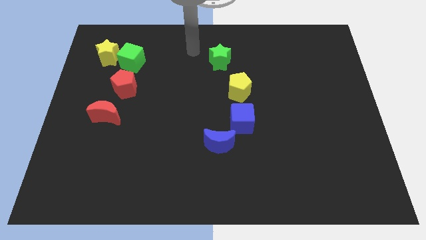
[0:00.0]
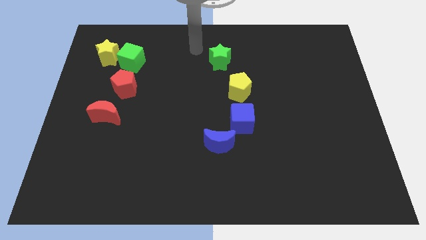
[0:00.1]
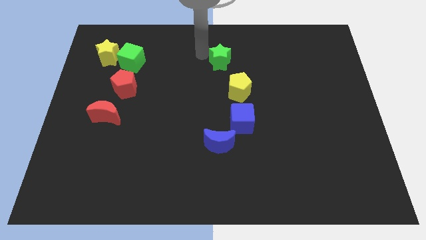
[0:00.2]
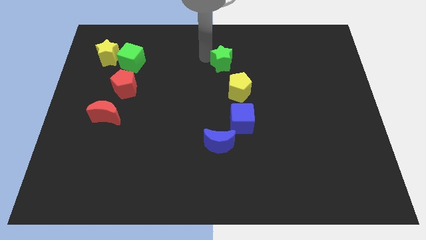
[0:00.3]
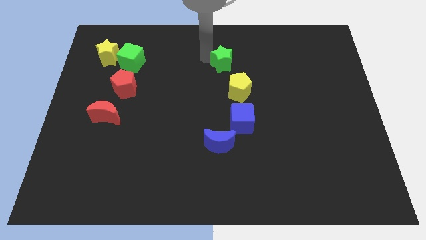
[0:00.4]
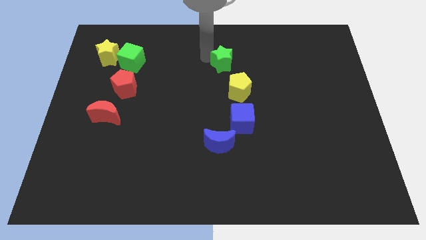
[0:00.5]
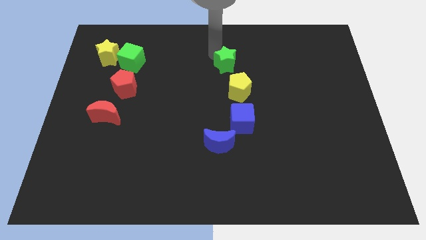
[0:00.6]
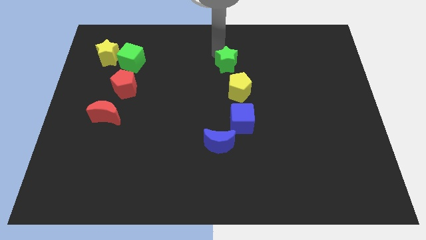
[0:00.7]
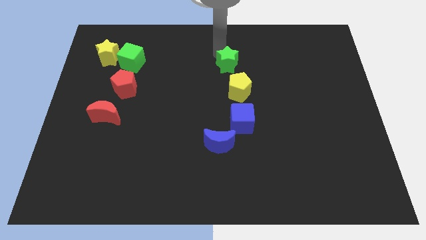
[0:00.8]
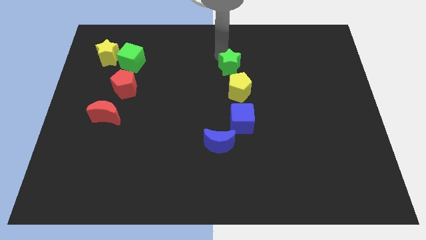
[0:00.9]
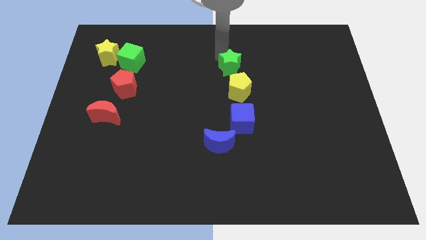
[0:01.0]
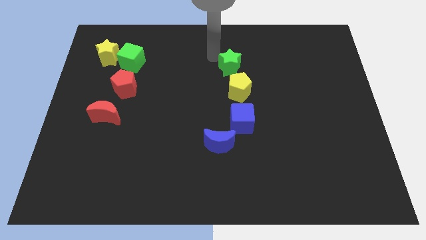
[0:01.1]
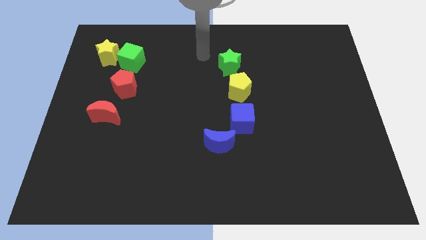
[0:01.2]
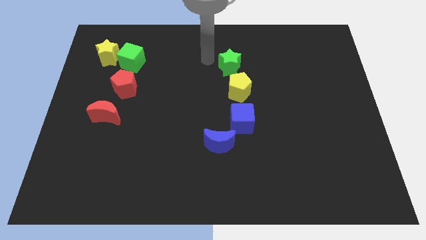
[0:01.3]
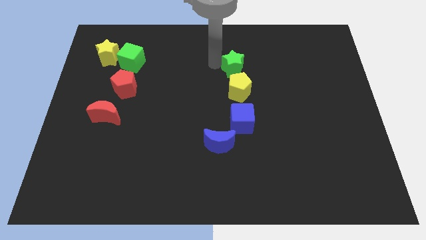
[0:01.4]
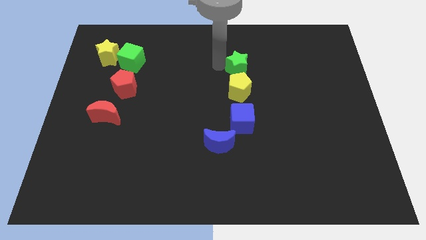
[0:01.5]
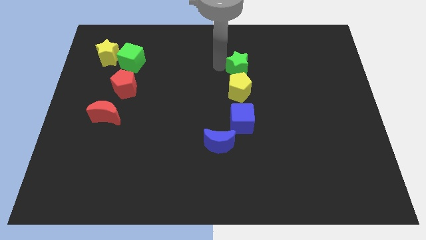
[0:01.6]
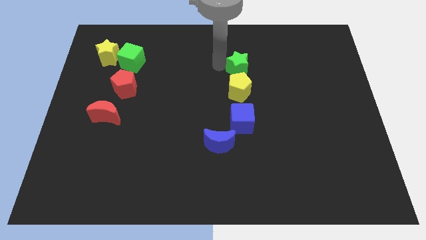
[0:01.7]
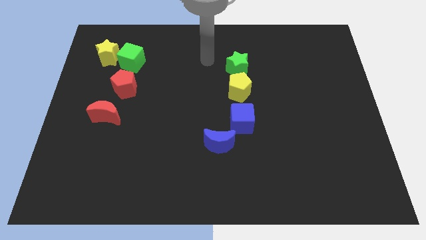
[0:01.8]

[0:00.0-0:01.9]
move the green star into the yellow pentagon

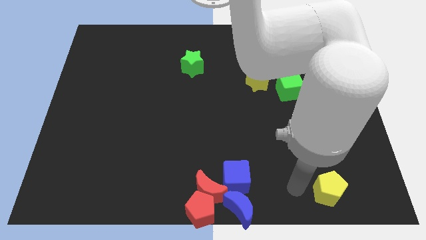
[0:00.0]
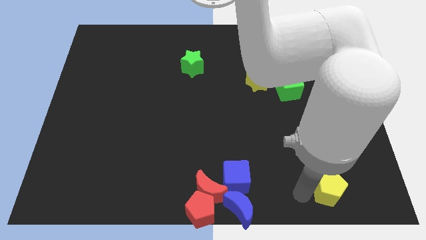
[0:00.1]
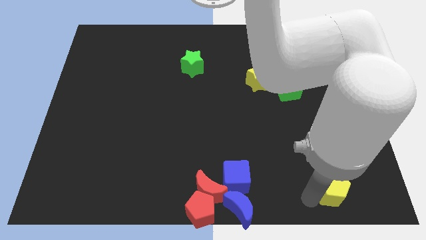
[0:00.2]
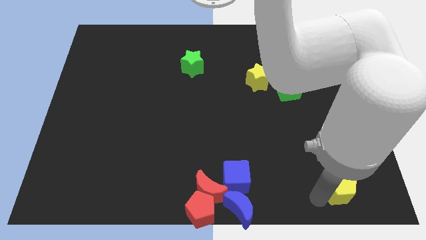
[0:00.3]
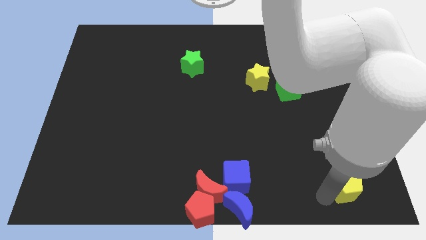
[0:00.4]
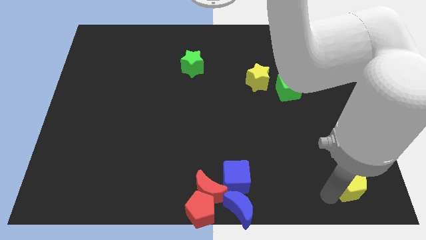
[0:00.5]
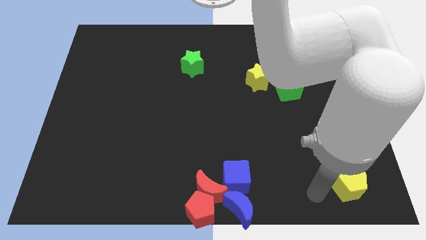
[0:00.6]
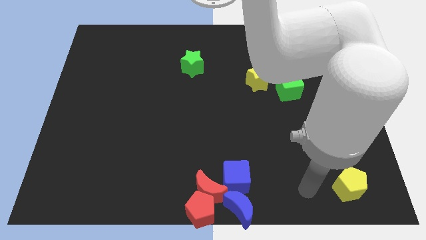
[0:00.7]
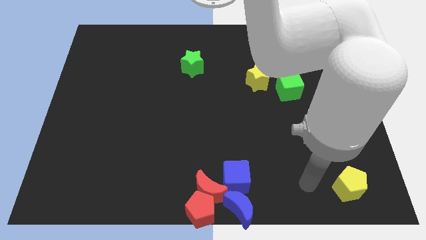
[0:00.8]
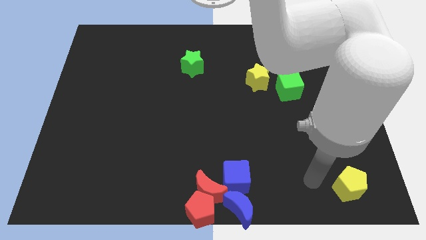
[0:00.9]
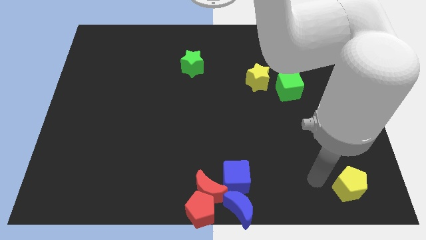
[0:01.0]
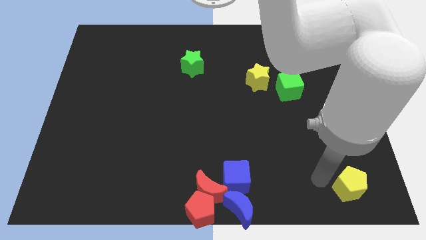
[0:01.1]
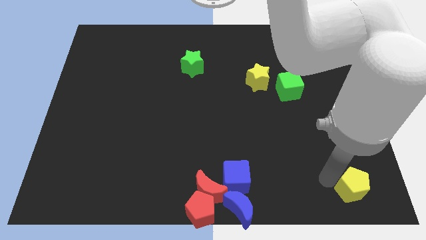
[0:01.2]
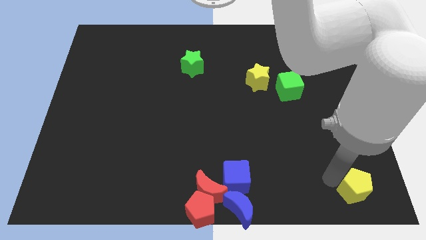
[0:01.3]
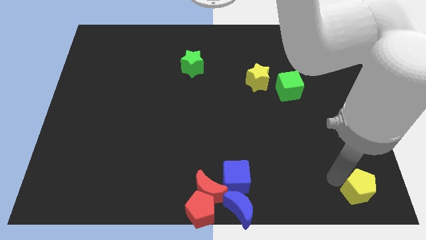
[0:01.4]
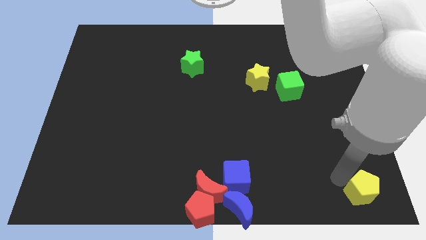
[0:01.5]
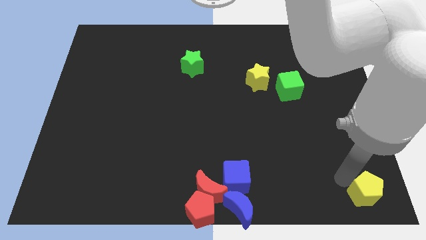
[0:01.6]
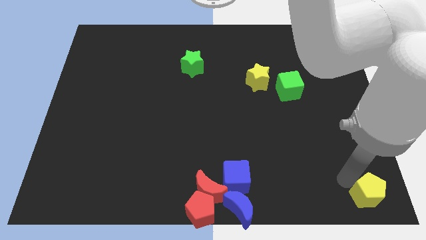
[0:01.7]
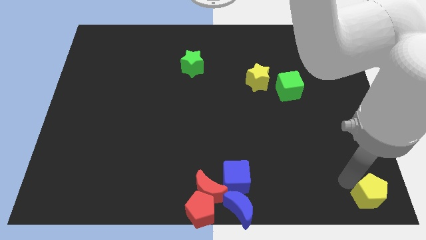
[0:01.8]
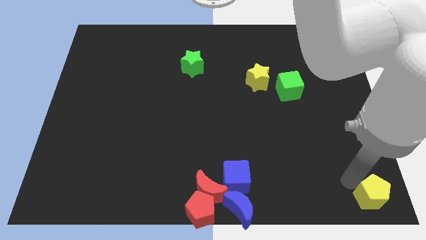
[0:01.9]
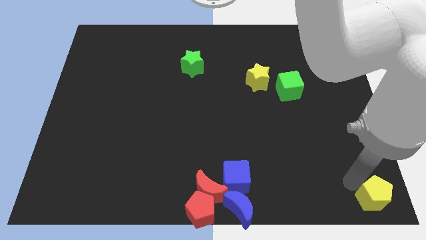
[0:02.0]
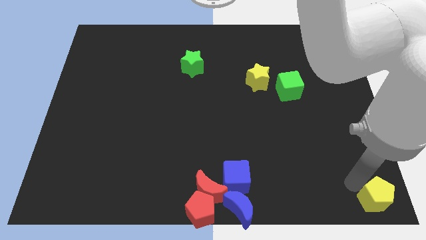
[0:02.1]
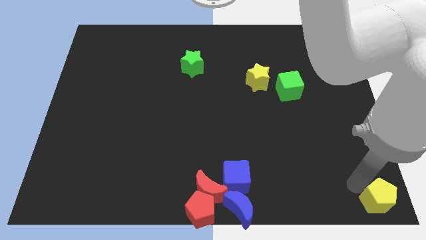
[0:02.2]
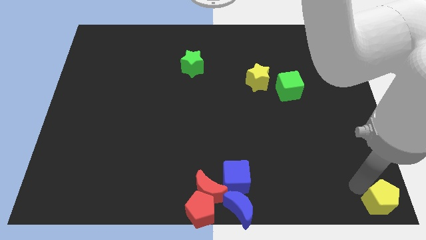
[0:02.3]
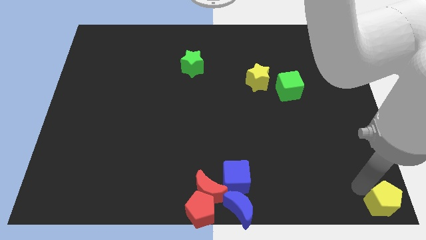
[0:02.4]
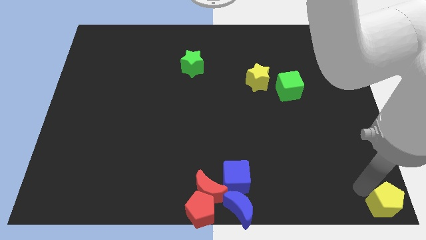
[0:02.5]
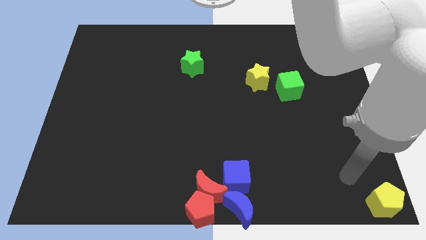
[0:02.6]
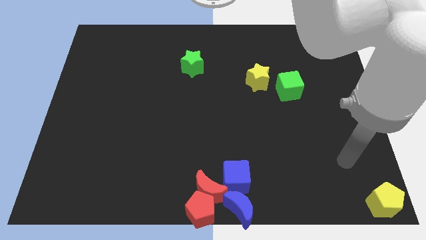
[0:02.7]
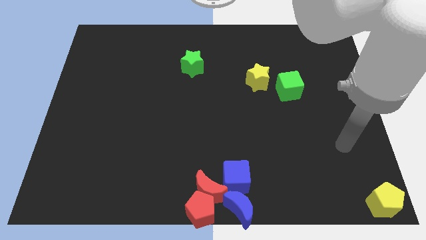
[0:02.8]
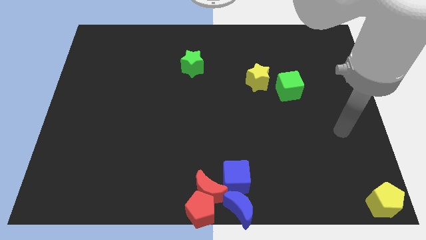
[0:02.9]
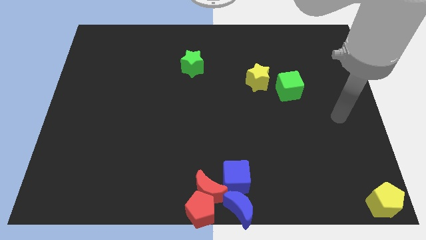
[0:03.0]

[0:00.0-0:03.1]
push the yellow pentagon to the bottom right corner of the board

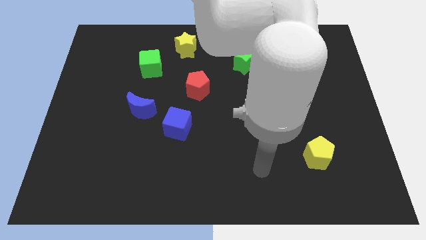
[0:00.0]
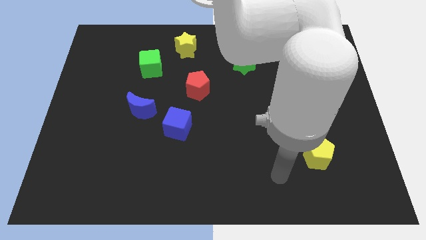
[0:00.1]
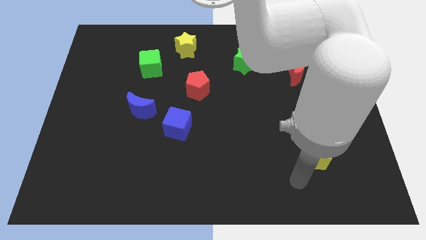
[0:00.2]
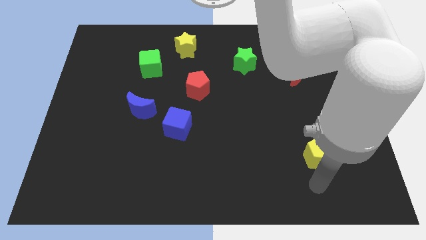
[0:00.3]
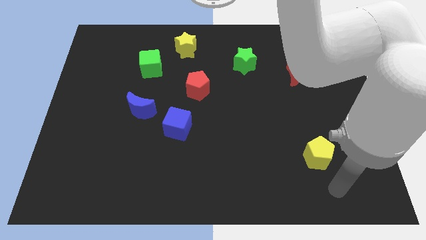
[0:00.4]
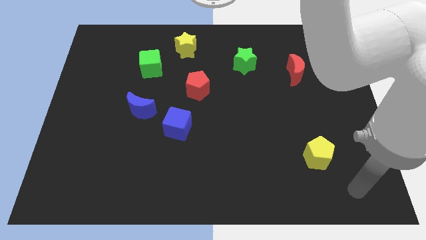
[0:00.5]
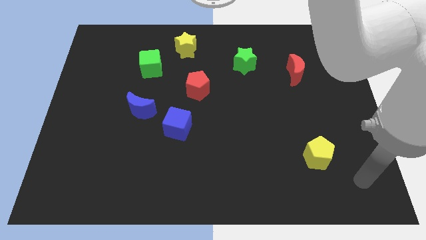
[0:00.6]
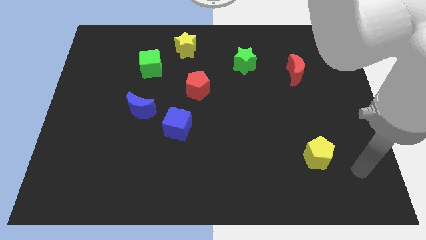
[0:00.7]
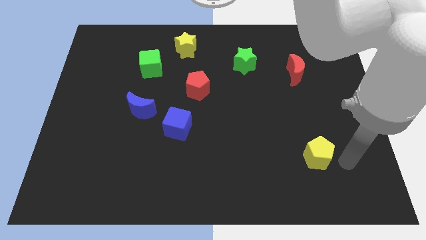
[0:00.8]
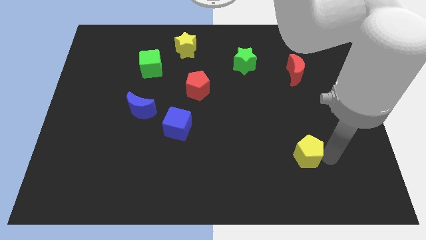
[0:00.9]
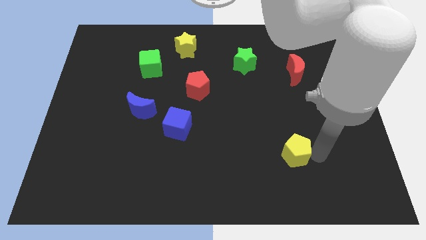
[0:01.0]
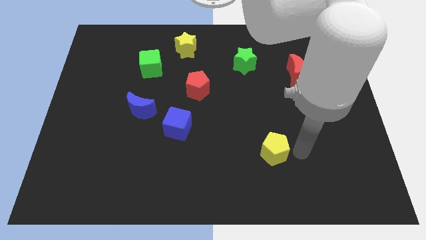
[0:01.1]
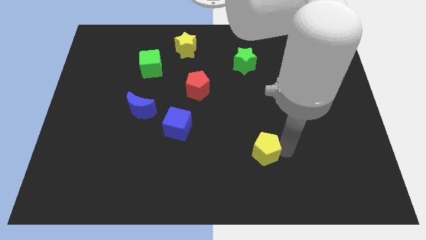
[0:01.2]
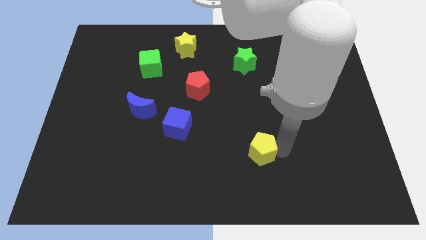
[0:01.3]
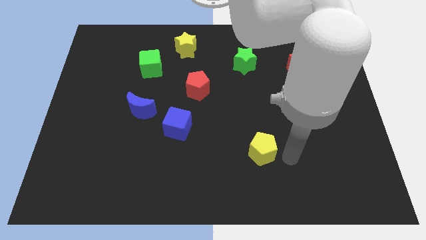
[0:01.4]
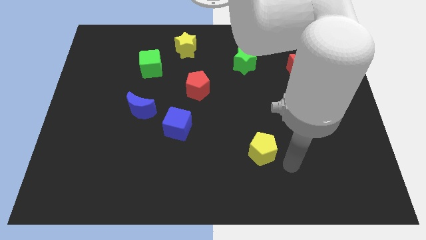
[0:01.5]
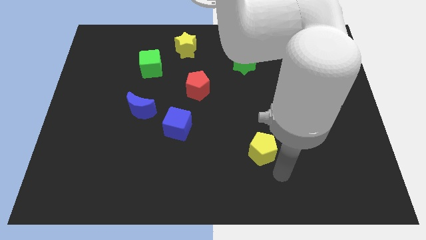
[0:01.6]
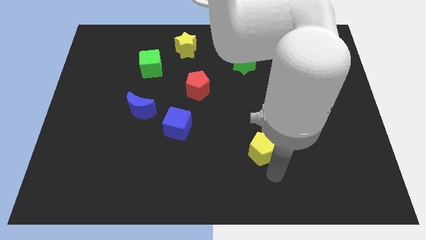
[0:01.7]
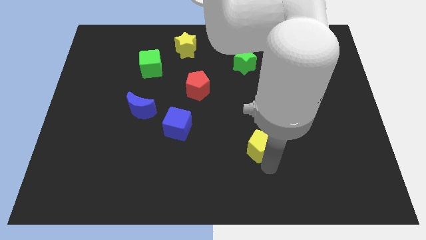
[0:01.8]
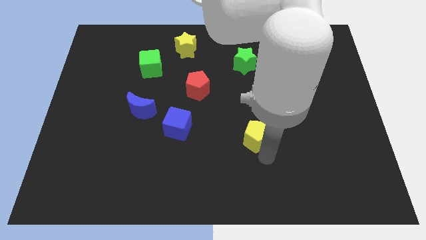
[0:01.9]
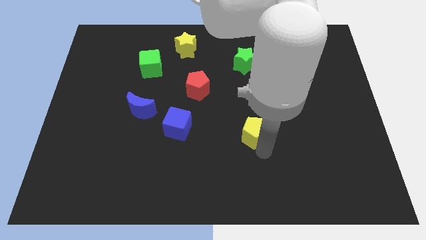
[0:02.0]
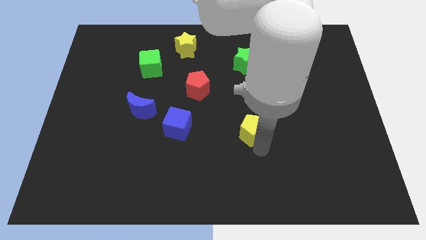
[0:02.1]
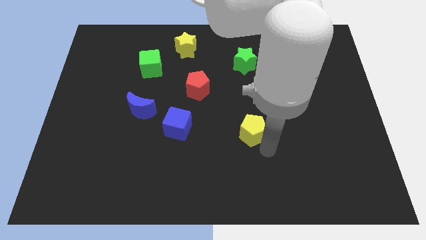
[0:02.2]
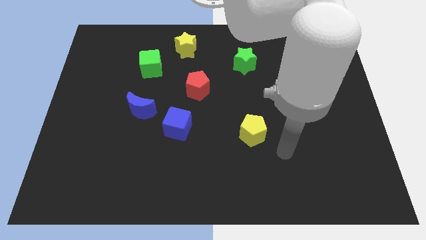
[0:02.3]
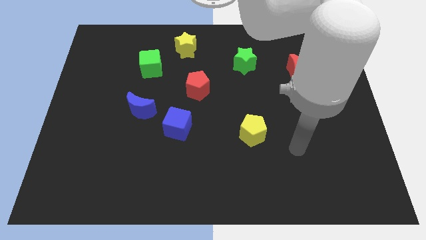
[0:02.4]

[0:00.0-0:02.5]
move the yellow pentagon to the right side of the blue cube

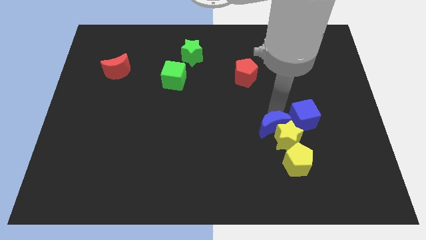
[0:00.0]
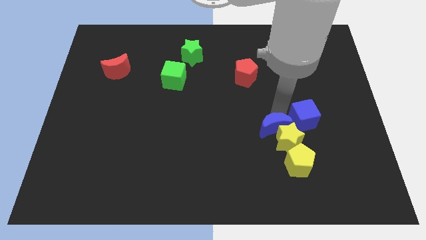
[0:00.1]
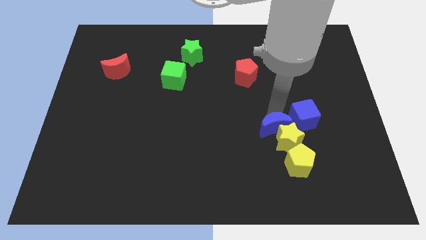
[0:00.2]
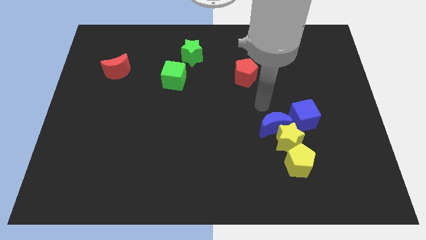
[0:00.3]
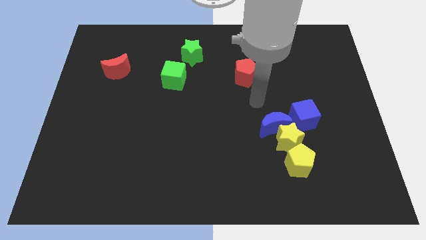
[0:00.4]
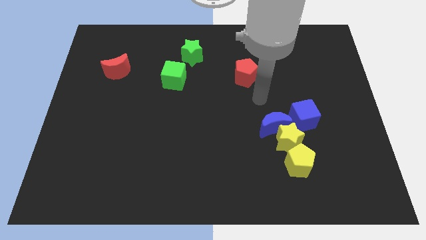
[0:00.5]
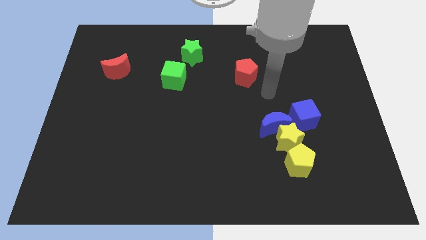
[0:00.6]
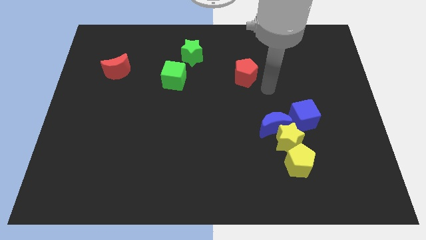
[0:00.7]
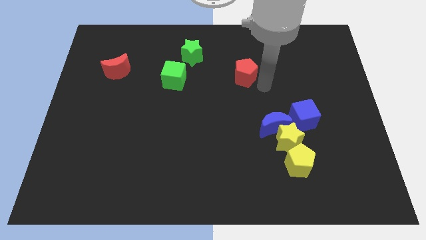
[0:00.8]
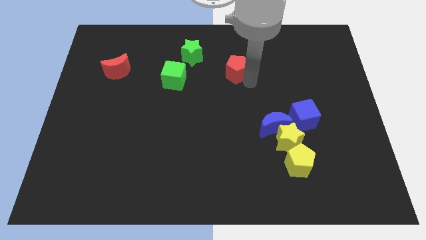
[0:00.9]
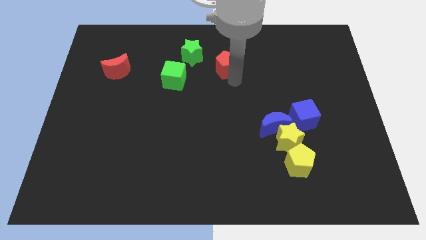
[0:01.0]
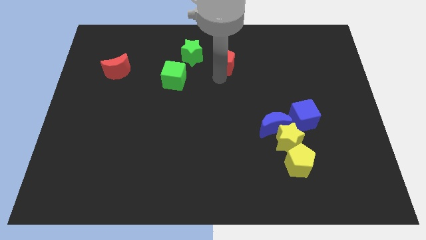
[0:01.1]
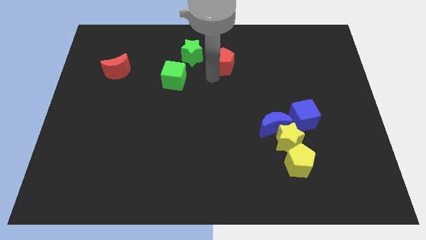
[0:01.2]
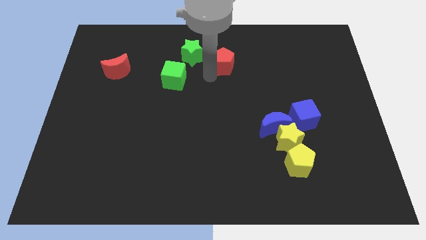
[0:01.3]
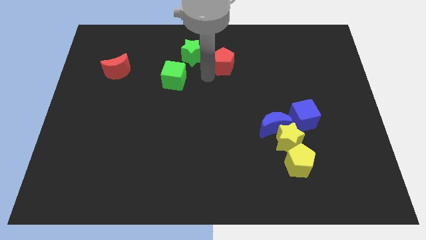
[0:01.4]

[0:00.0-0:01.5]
push the red pentagon to the right of green star
